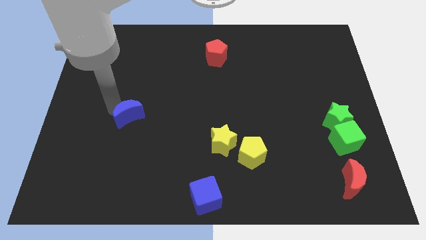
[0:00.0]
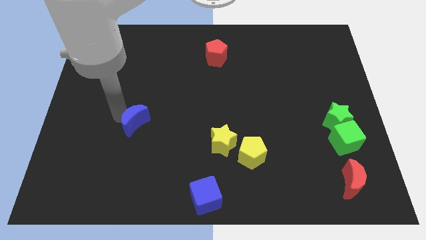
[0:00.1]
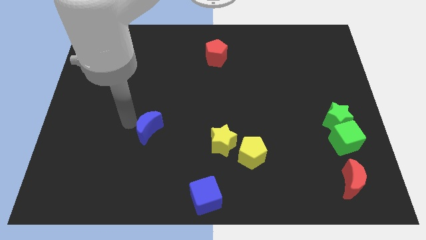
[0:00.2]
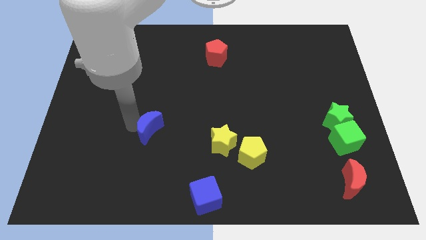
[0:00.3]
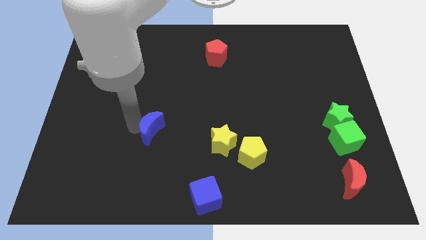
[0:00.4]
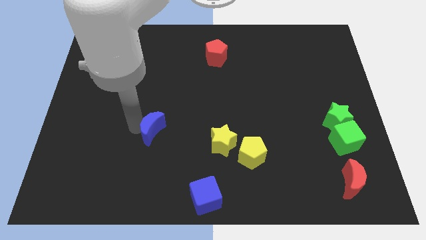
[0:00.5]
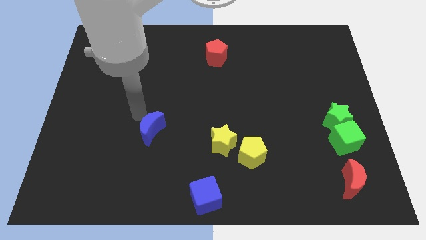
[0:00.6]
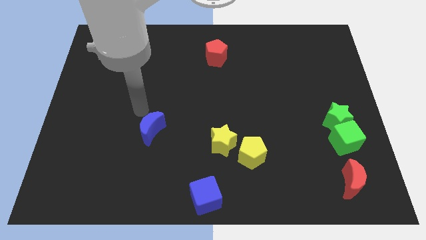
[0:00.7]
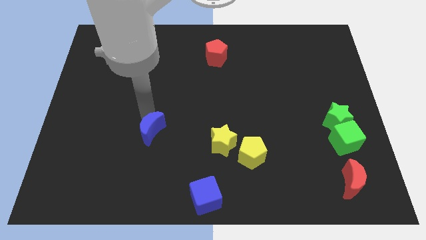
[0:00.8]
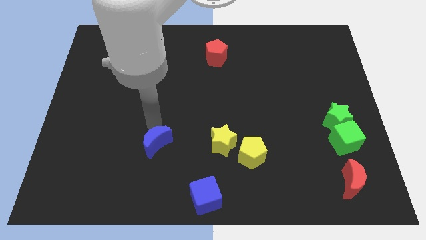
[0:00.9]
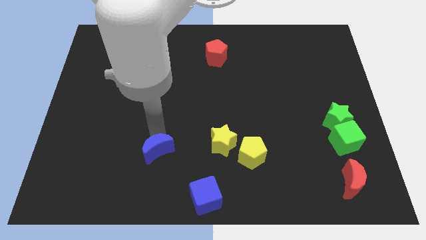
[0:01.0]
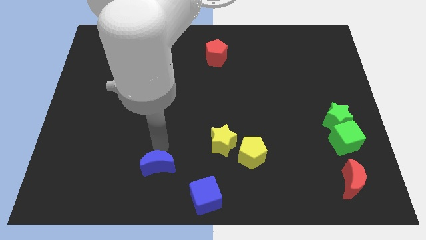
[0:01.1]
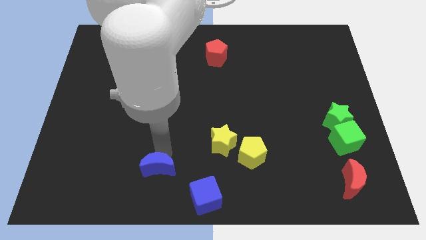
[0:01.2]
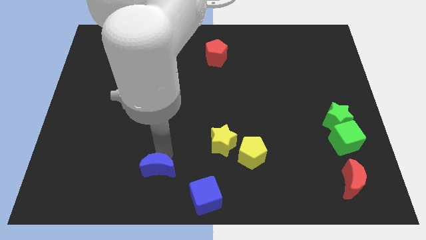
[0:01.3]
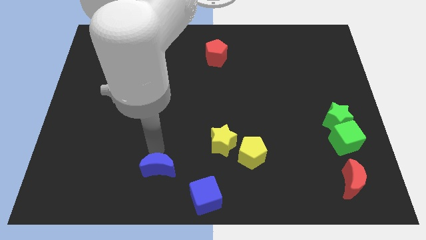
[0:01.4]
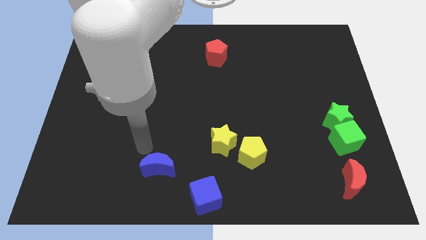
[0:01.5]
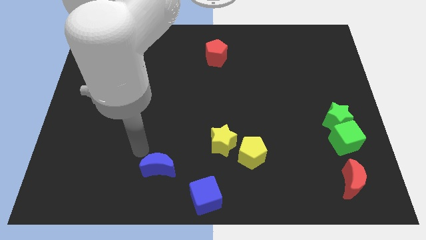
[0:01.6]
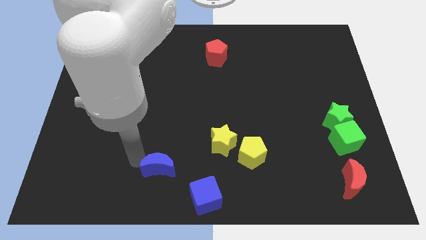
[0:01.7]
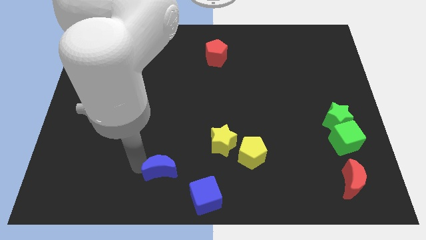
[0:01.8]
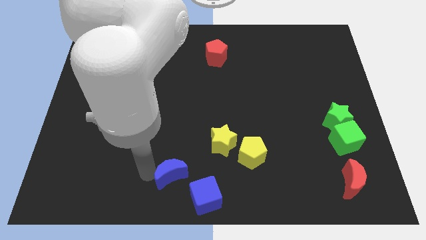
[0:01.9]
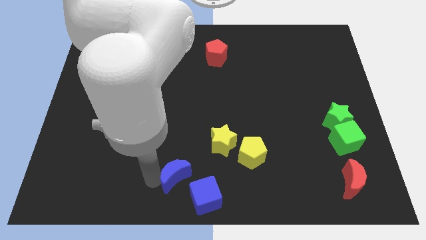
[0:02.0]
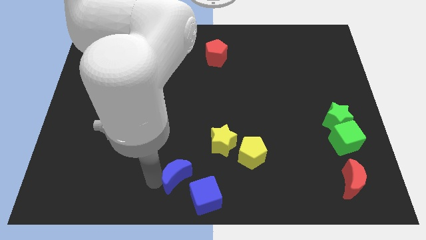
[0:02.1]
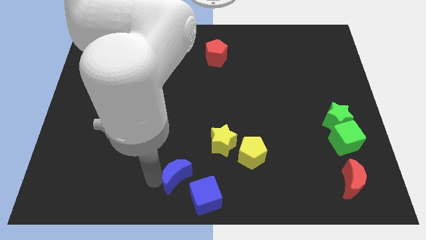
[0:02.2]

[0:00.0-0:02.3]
move the blue moon towards the blue cube

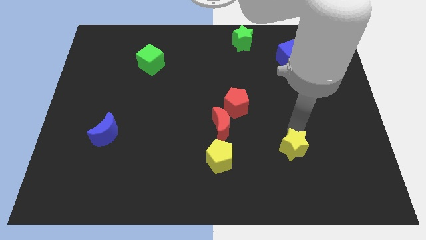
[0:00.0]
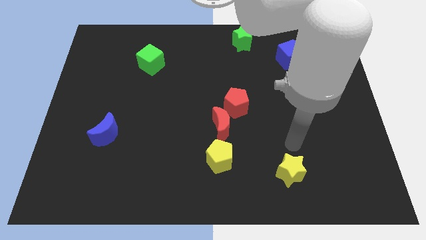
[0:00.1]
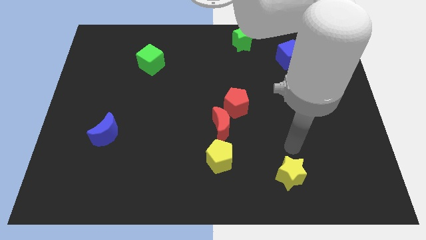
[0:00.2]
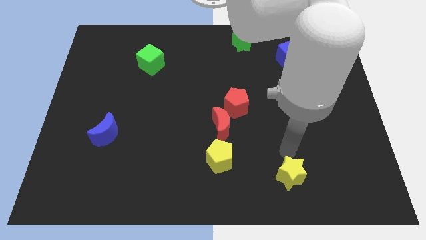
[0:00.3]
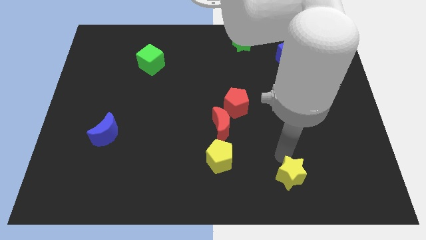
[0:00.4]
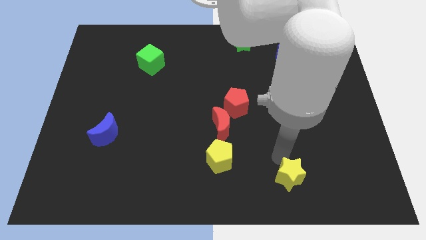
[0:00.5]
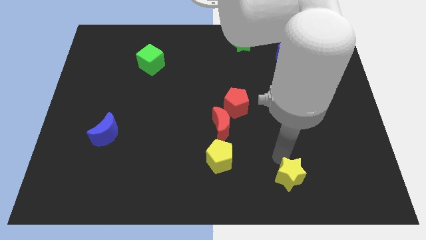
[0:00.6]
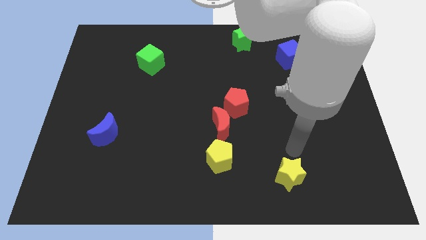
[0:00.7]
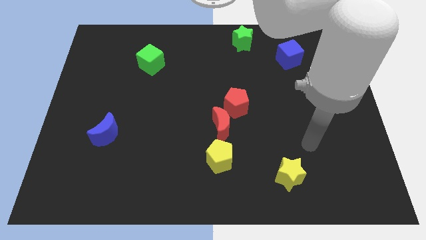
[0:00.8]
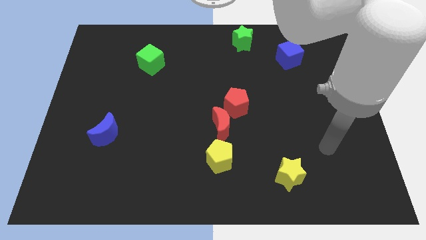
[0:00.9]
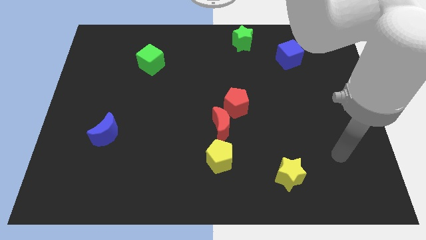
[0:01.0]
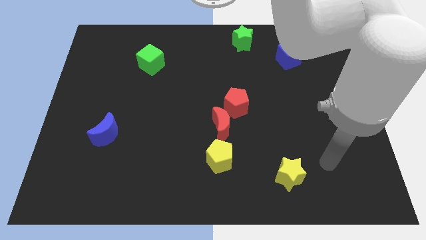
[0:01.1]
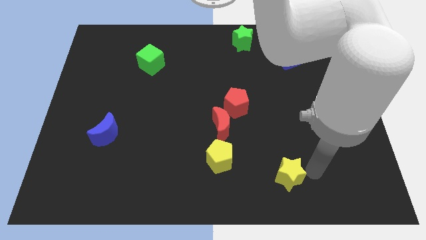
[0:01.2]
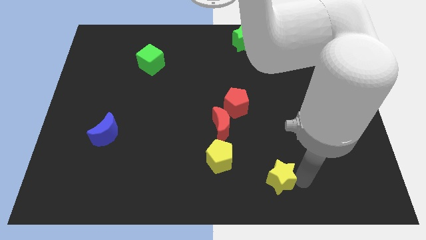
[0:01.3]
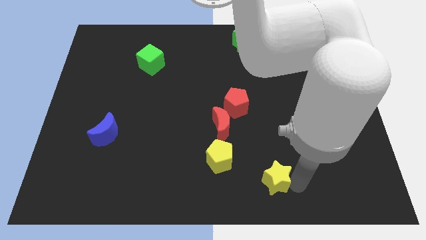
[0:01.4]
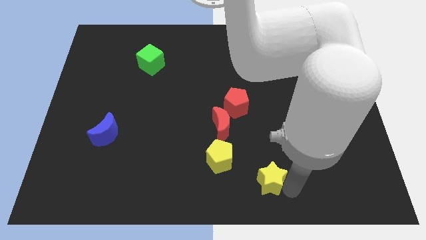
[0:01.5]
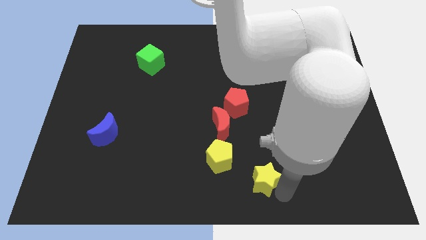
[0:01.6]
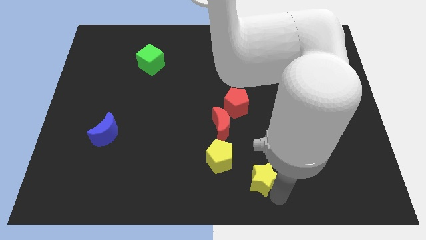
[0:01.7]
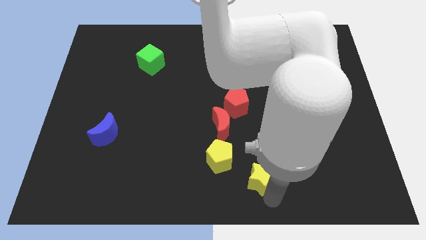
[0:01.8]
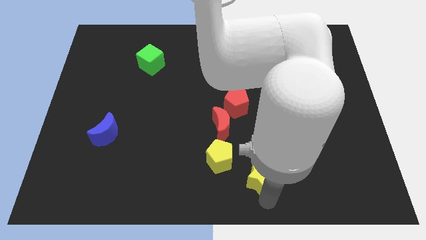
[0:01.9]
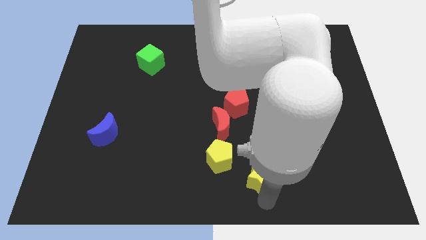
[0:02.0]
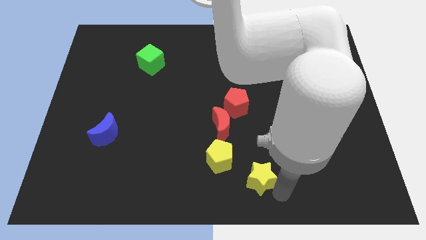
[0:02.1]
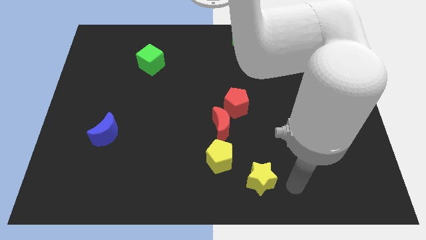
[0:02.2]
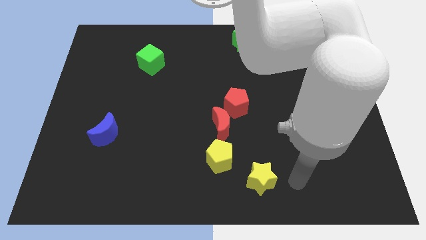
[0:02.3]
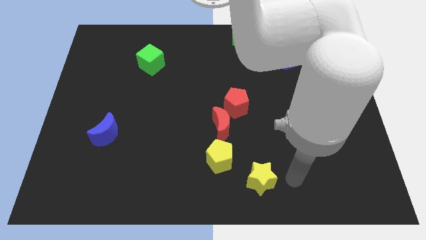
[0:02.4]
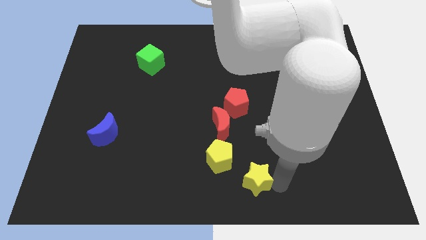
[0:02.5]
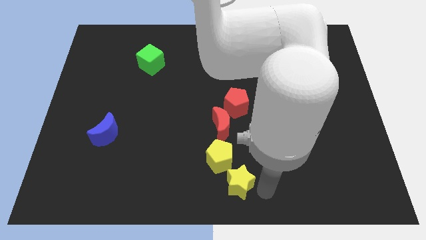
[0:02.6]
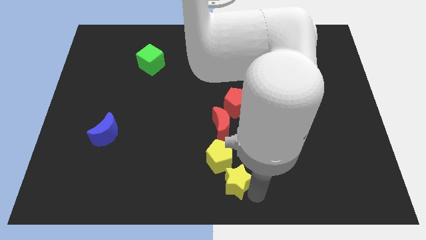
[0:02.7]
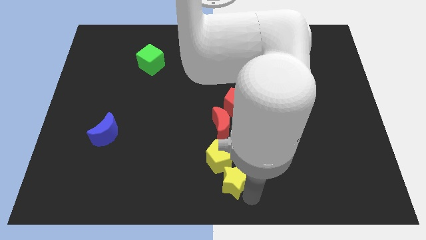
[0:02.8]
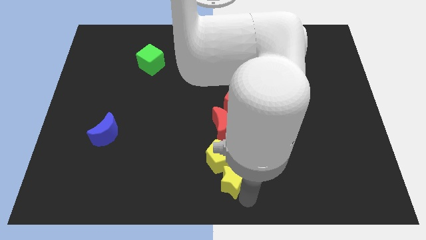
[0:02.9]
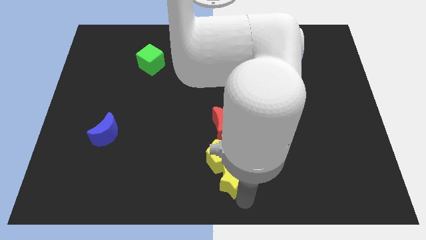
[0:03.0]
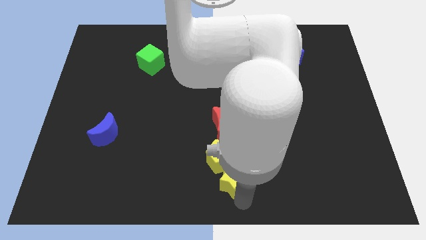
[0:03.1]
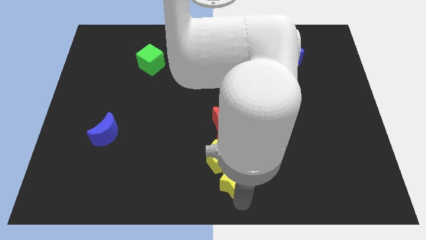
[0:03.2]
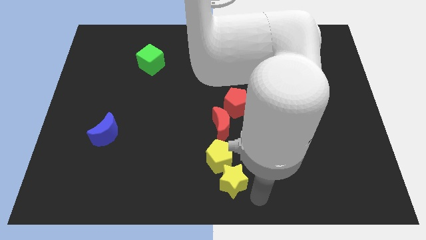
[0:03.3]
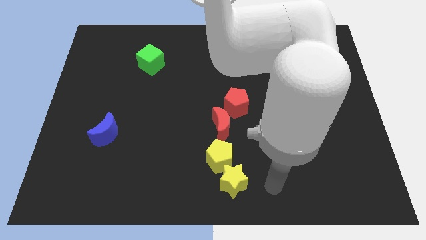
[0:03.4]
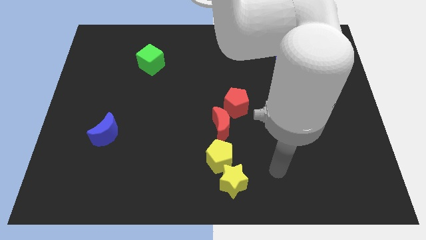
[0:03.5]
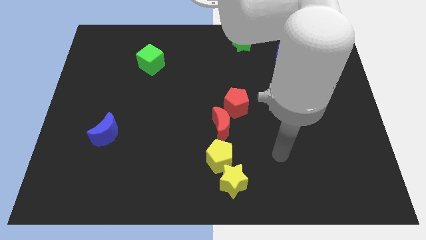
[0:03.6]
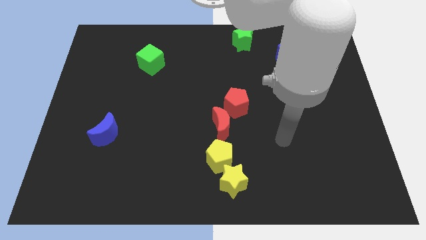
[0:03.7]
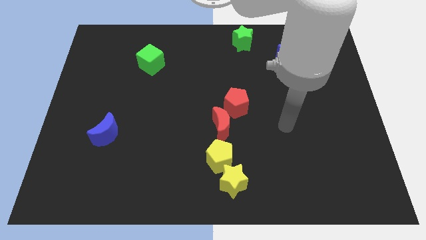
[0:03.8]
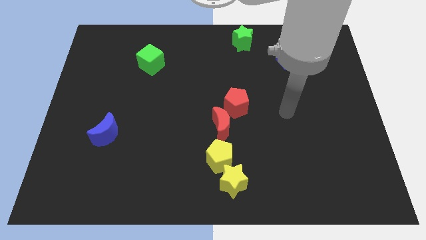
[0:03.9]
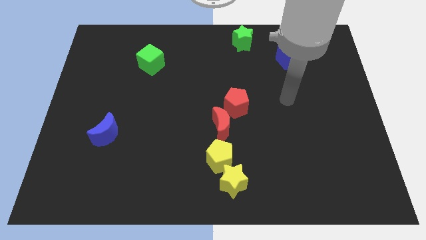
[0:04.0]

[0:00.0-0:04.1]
push yellow star vertical to red pentagon in a line

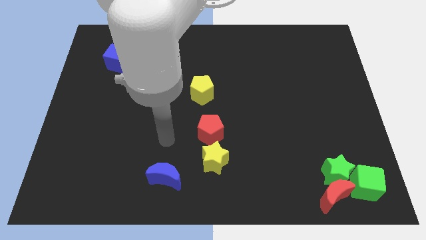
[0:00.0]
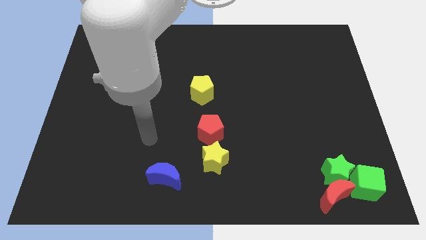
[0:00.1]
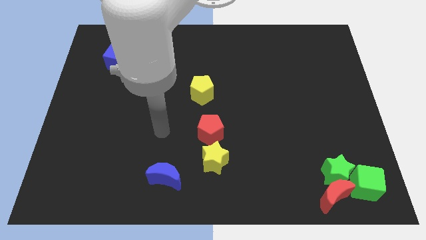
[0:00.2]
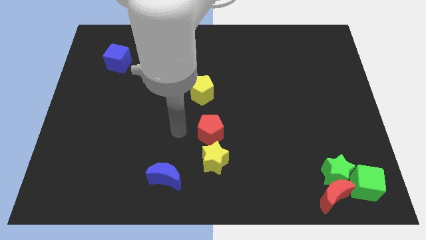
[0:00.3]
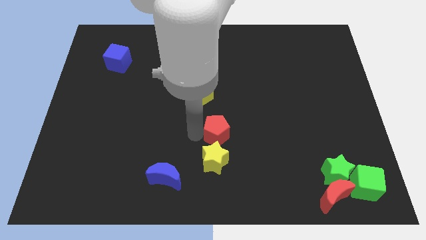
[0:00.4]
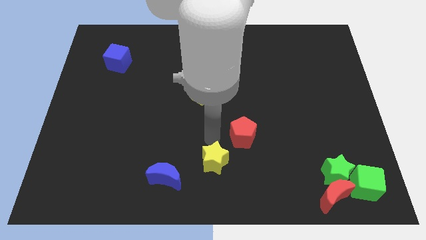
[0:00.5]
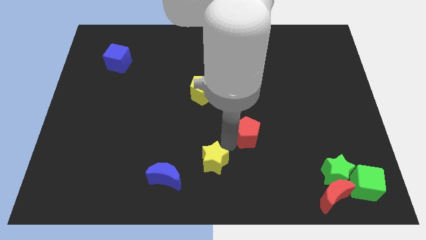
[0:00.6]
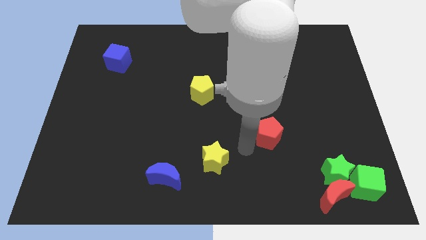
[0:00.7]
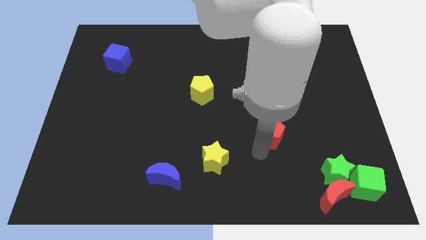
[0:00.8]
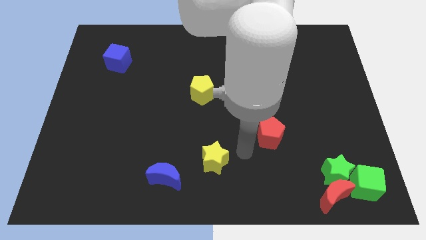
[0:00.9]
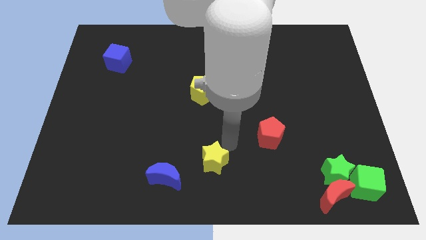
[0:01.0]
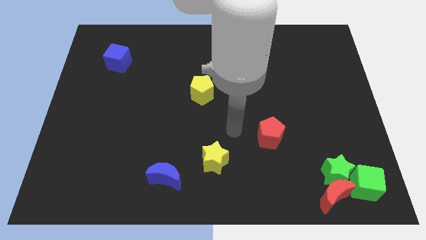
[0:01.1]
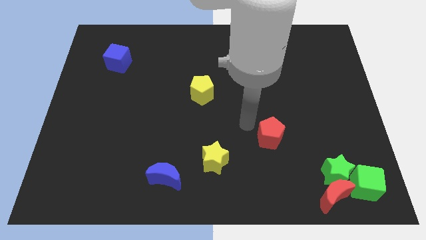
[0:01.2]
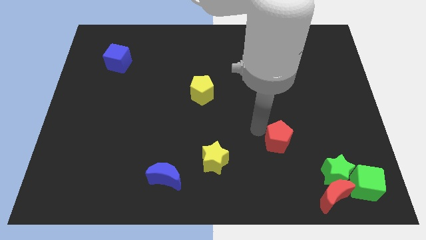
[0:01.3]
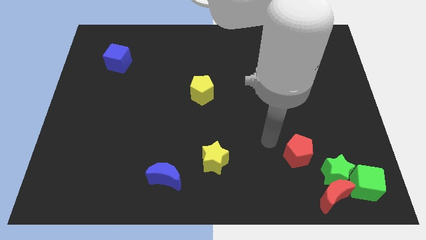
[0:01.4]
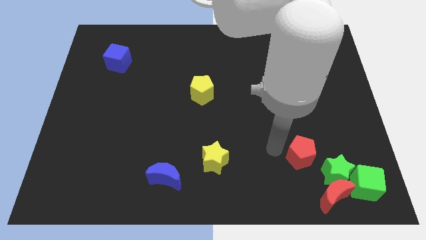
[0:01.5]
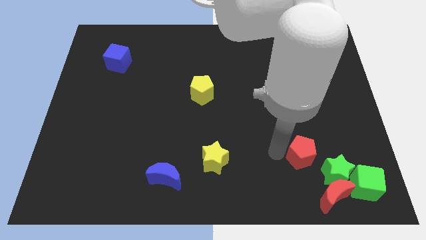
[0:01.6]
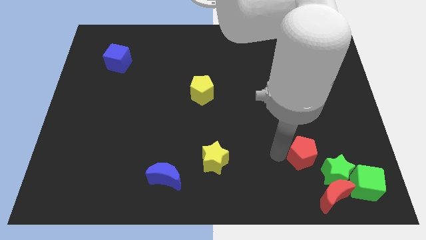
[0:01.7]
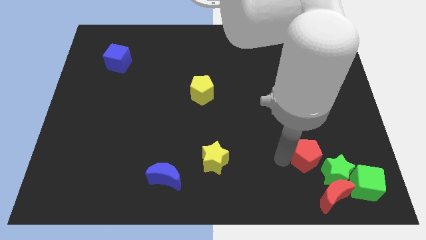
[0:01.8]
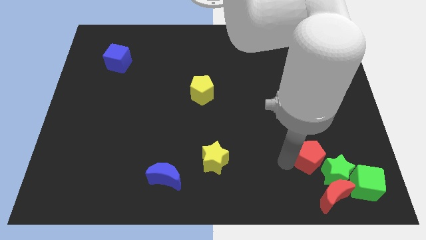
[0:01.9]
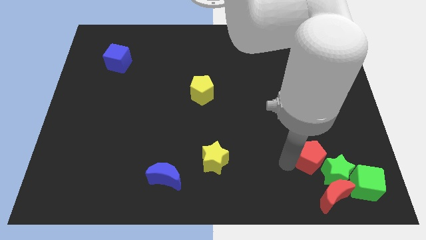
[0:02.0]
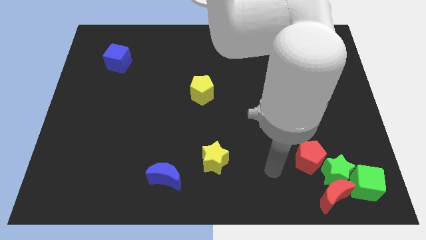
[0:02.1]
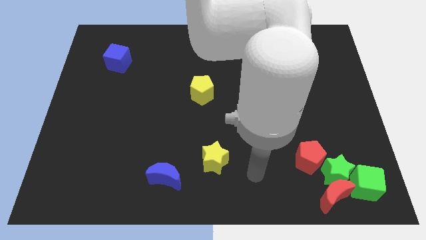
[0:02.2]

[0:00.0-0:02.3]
move the red pentagon towards the green star

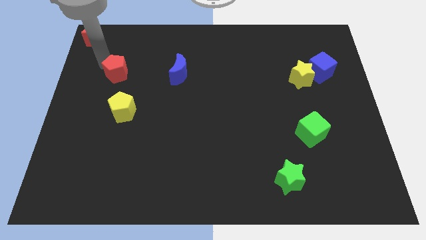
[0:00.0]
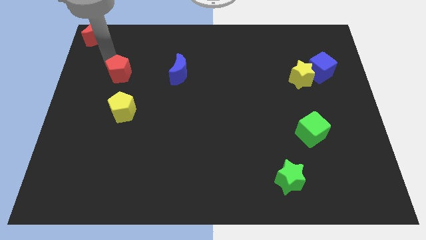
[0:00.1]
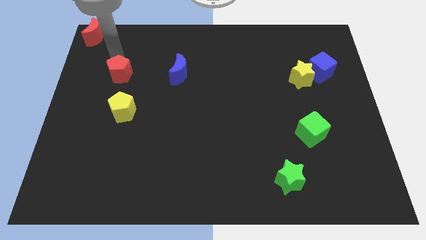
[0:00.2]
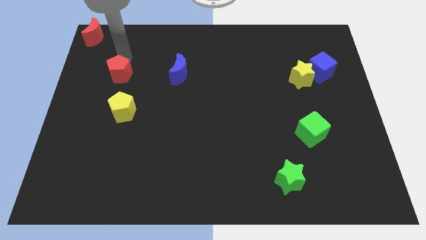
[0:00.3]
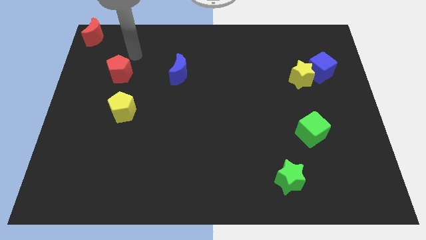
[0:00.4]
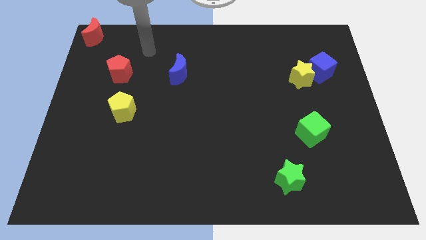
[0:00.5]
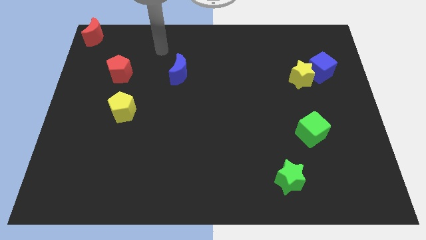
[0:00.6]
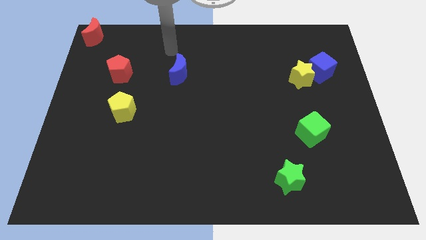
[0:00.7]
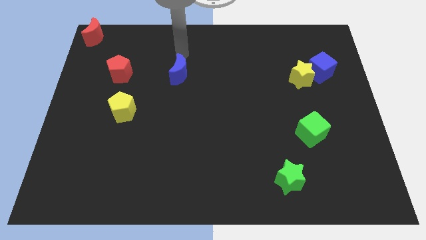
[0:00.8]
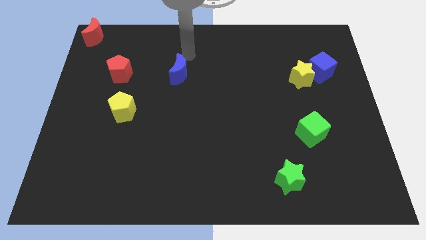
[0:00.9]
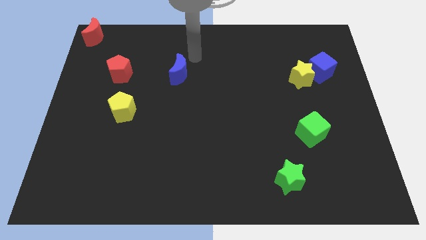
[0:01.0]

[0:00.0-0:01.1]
move your hand to the top of the blue moon
